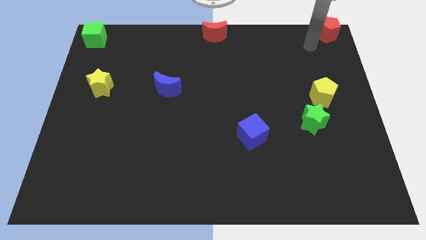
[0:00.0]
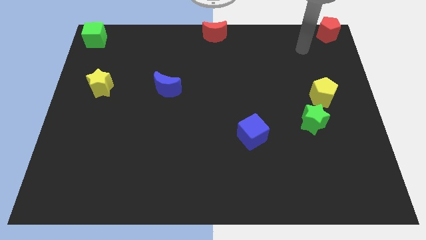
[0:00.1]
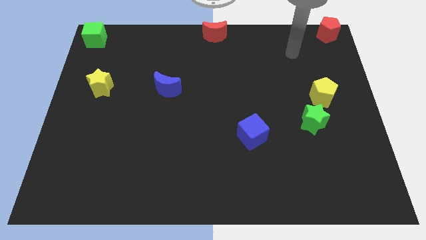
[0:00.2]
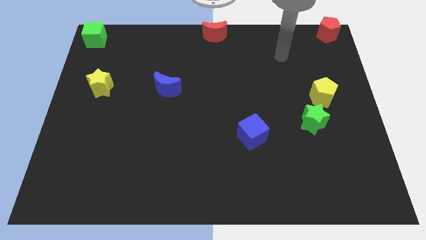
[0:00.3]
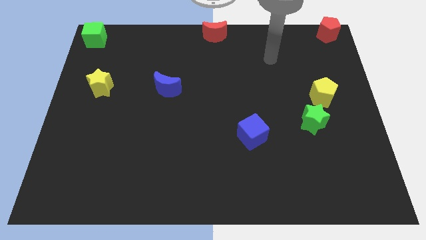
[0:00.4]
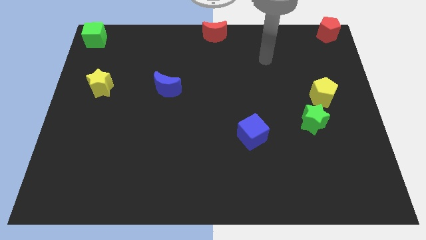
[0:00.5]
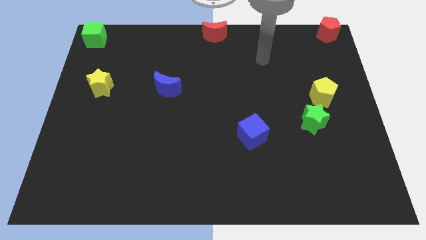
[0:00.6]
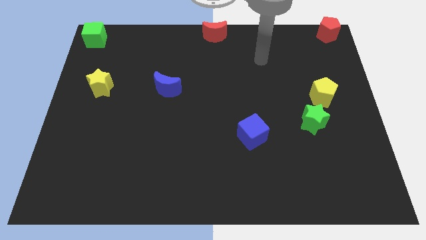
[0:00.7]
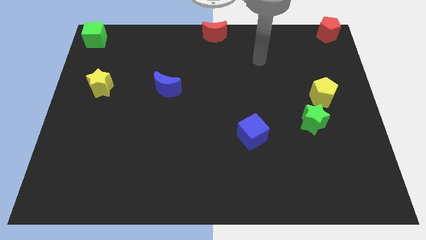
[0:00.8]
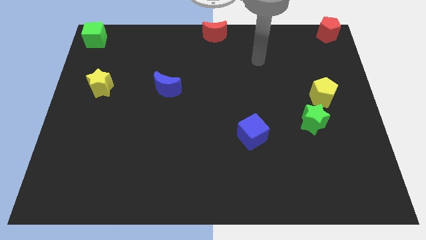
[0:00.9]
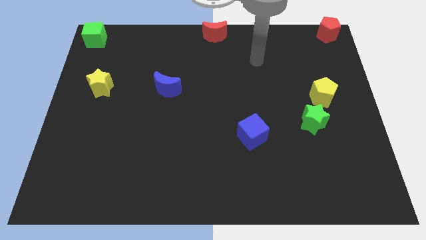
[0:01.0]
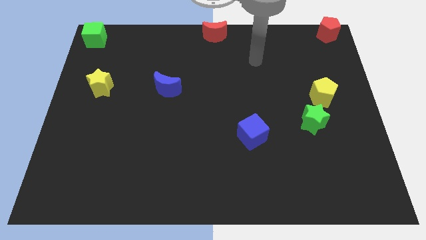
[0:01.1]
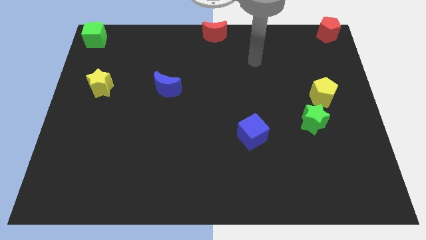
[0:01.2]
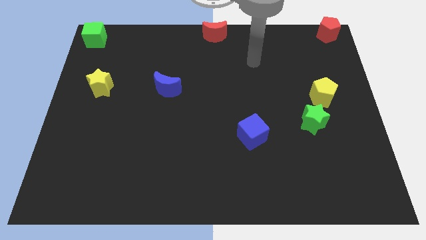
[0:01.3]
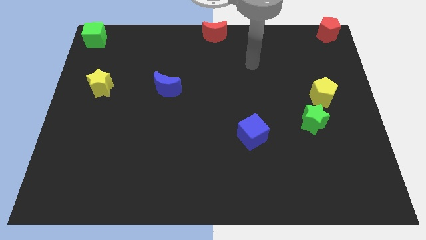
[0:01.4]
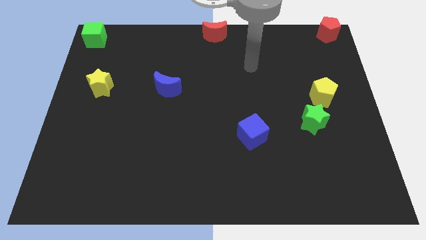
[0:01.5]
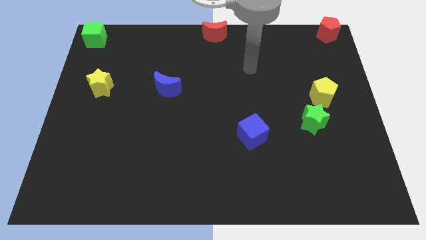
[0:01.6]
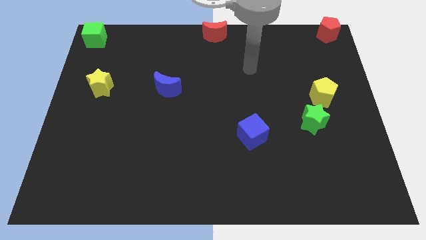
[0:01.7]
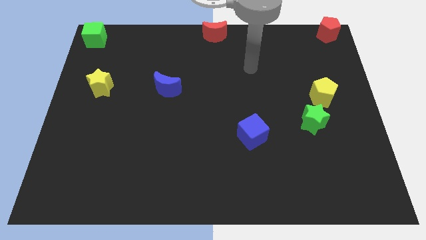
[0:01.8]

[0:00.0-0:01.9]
move your arm away from the red pentagon

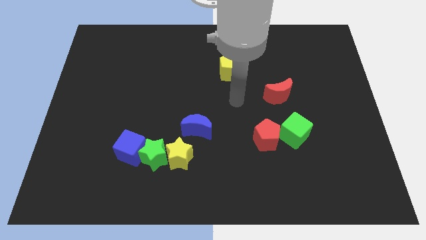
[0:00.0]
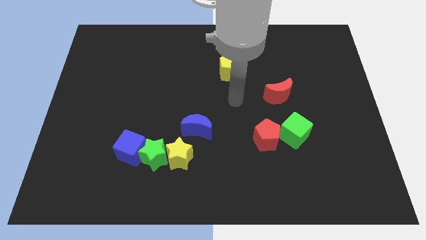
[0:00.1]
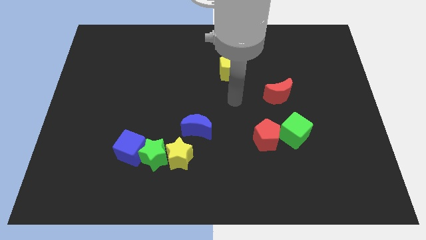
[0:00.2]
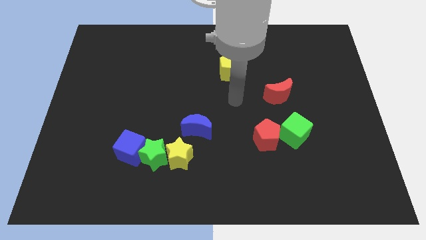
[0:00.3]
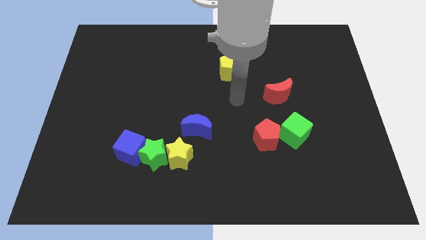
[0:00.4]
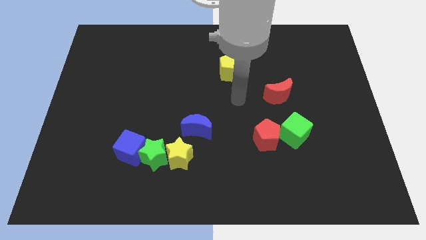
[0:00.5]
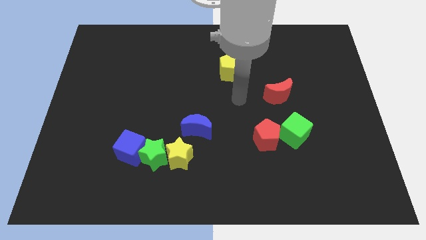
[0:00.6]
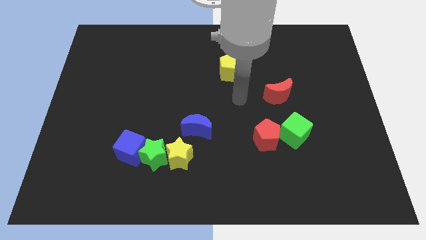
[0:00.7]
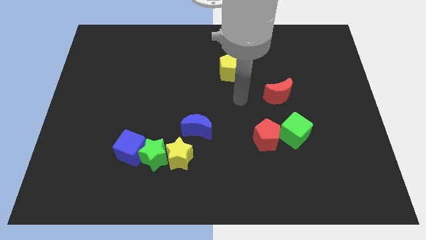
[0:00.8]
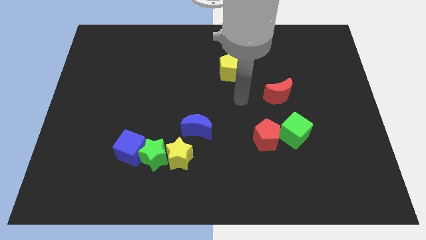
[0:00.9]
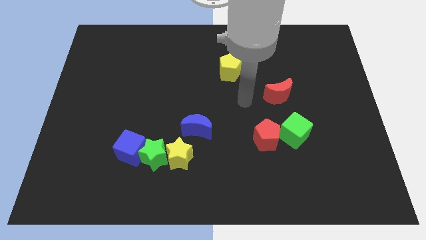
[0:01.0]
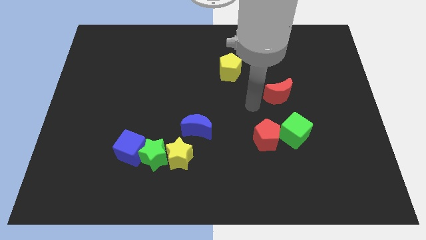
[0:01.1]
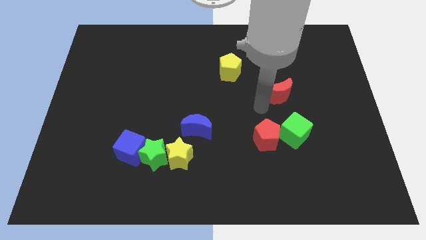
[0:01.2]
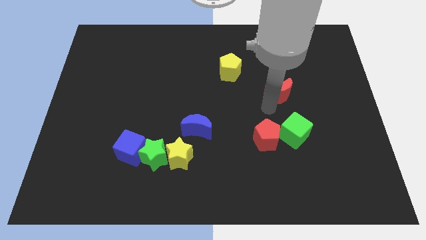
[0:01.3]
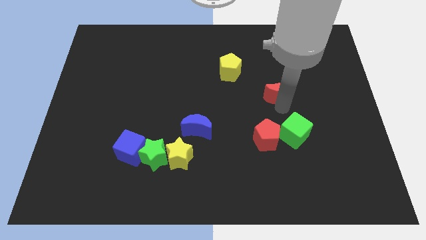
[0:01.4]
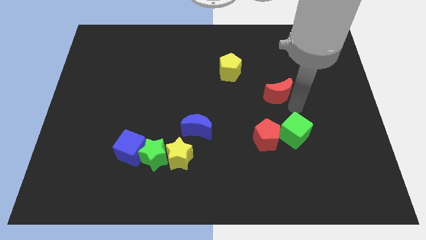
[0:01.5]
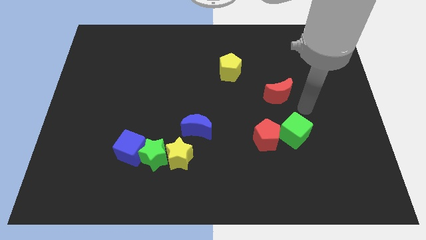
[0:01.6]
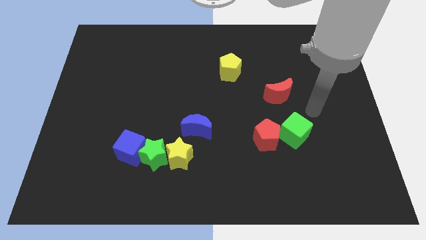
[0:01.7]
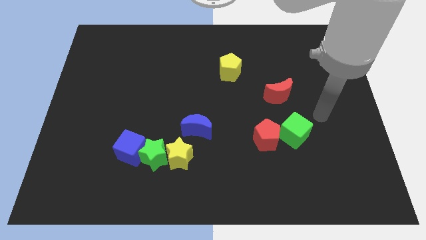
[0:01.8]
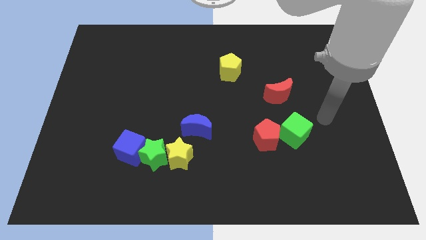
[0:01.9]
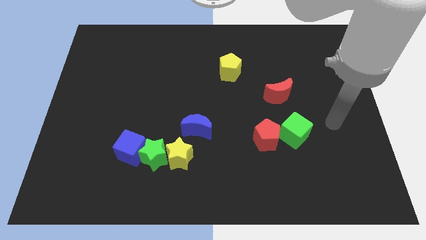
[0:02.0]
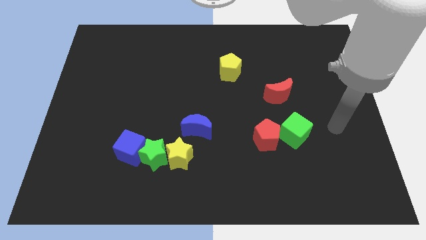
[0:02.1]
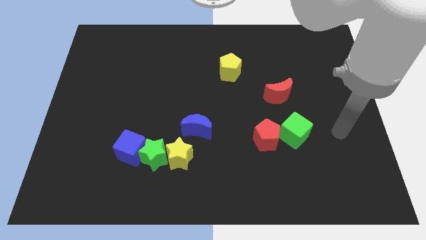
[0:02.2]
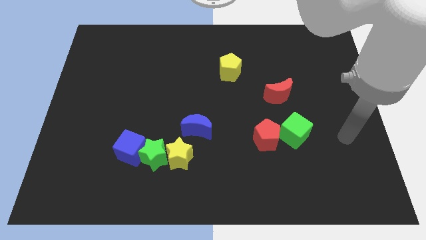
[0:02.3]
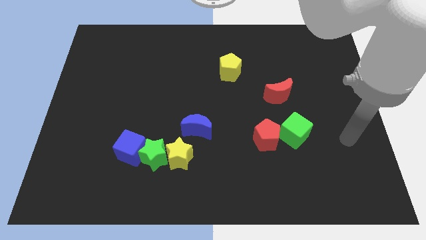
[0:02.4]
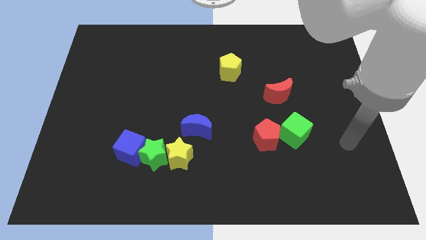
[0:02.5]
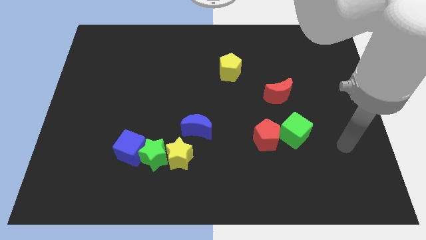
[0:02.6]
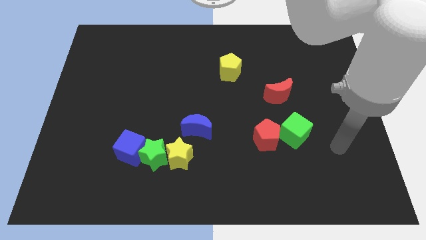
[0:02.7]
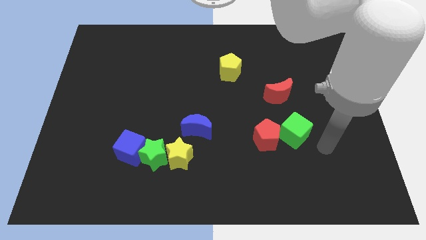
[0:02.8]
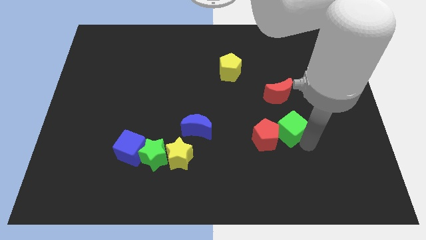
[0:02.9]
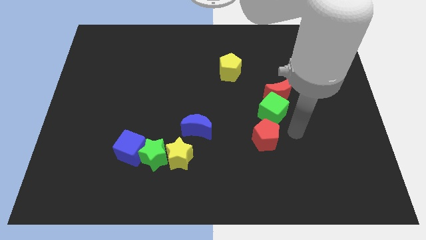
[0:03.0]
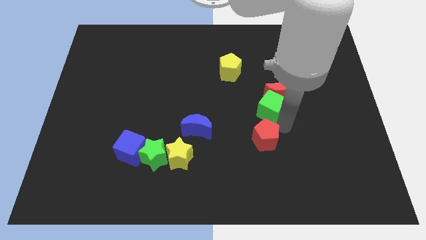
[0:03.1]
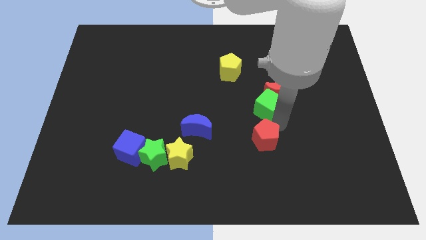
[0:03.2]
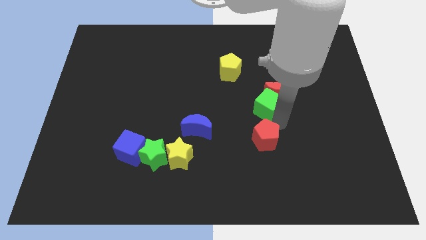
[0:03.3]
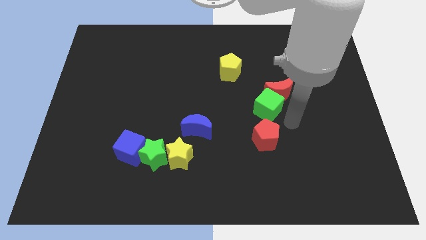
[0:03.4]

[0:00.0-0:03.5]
place the green cube below the red crescent

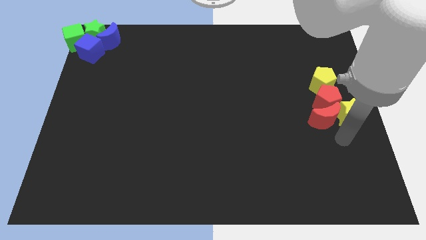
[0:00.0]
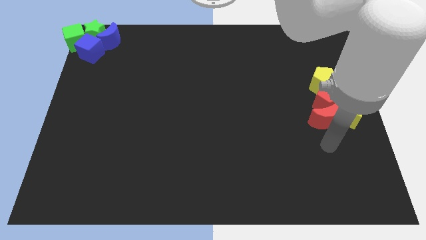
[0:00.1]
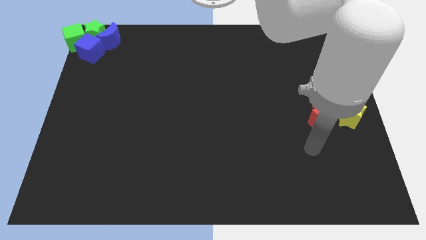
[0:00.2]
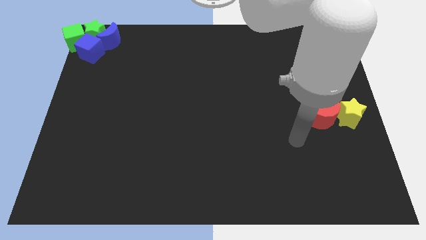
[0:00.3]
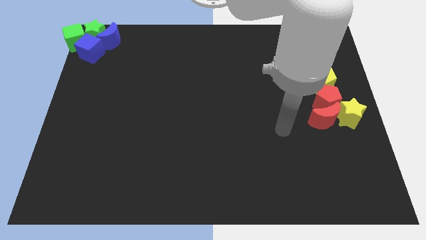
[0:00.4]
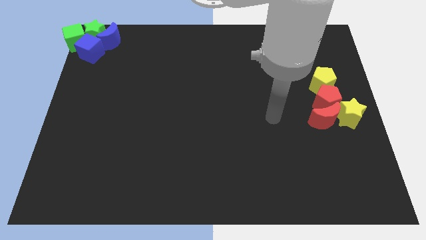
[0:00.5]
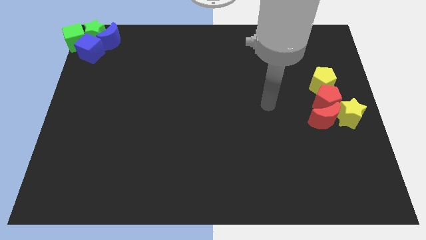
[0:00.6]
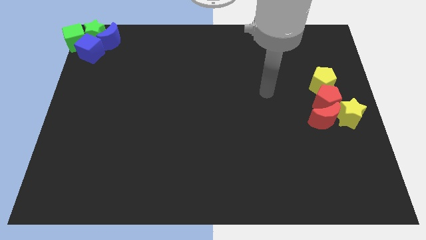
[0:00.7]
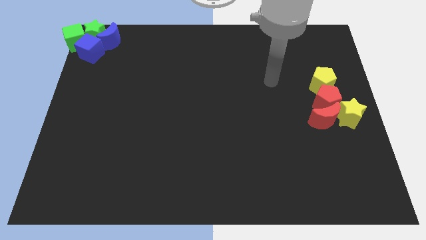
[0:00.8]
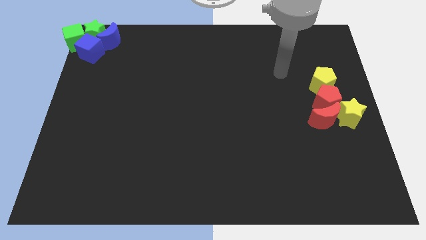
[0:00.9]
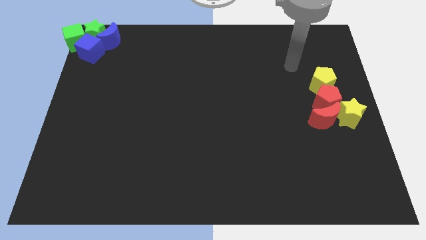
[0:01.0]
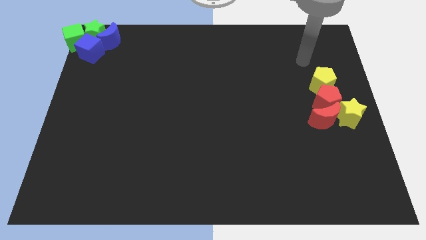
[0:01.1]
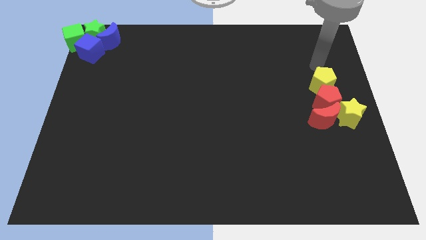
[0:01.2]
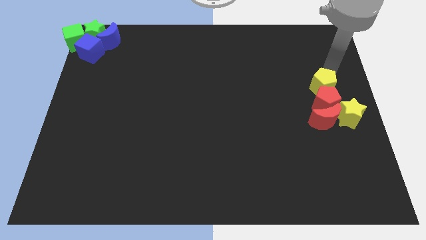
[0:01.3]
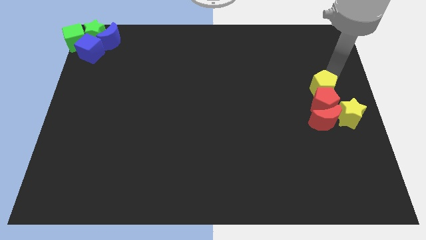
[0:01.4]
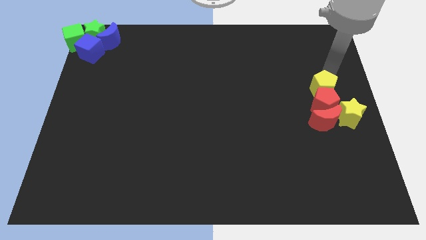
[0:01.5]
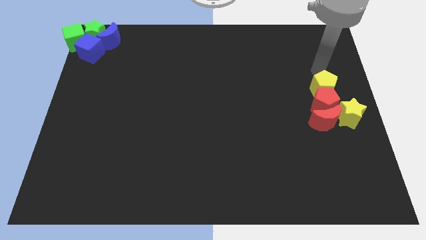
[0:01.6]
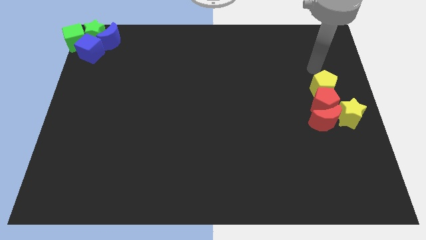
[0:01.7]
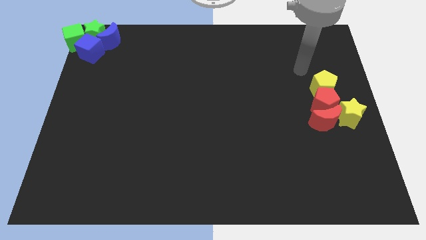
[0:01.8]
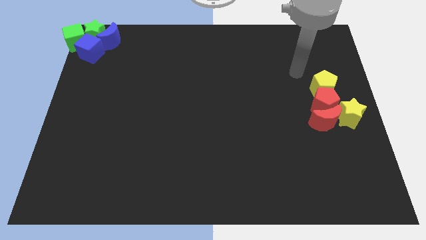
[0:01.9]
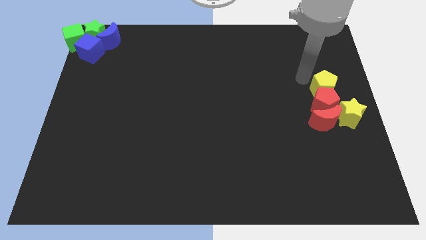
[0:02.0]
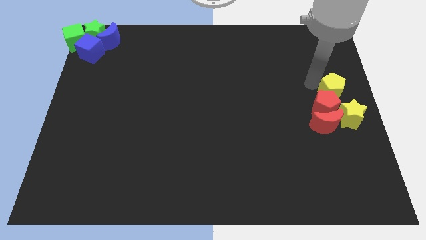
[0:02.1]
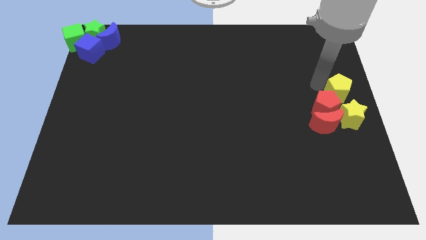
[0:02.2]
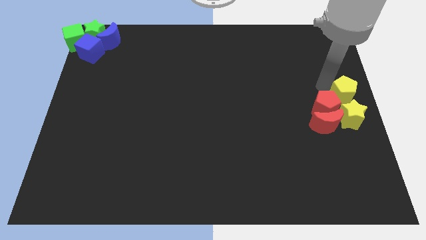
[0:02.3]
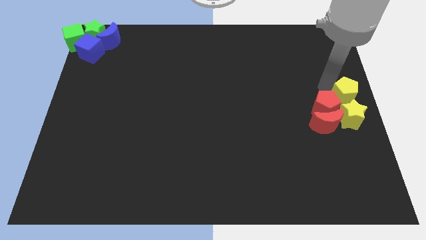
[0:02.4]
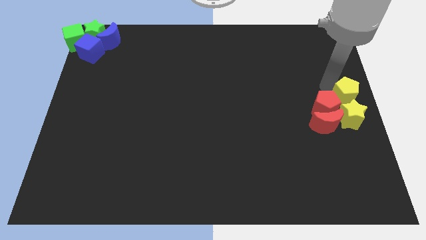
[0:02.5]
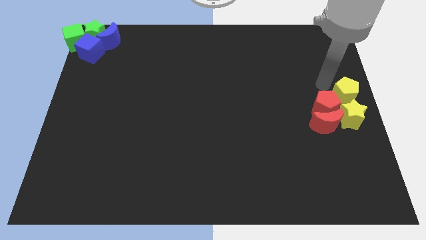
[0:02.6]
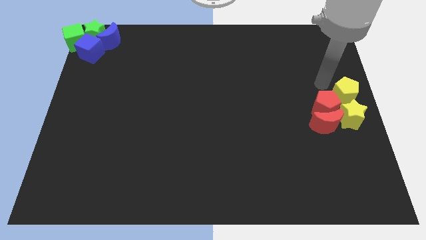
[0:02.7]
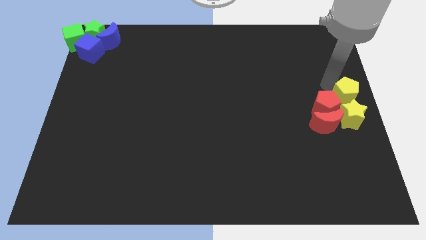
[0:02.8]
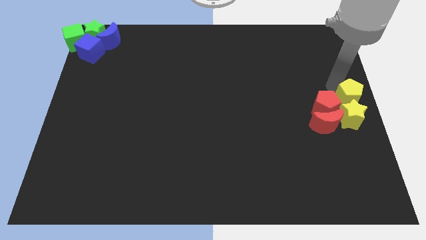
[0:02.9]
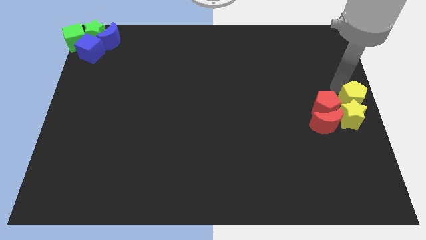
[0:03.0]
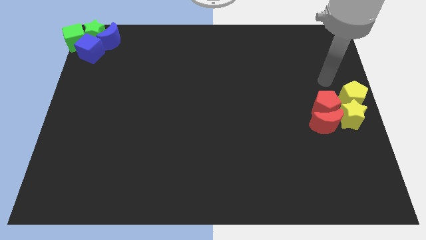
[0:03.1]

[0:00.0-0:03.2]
place all the red and yellow blocks at the center right of the board

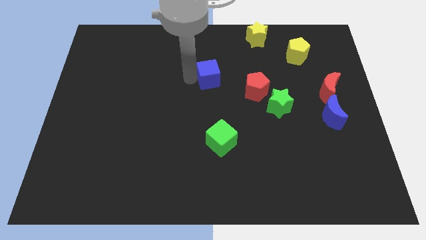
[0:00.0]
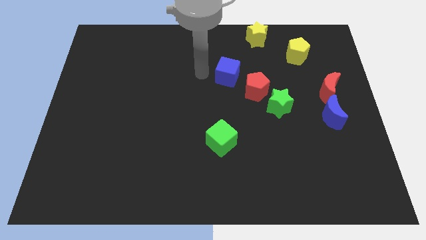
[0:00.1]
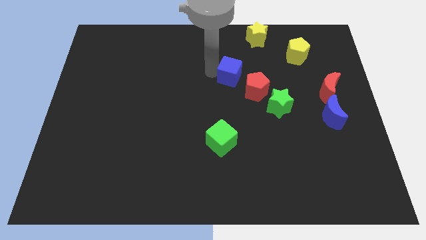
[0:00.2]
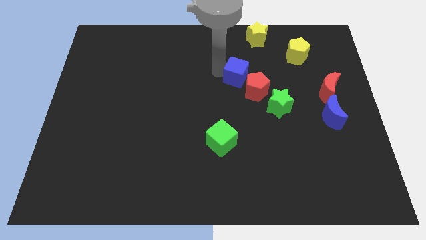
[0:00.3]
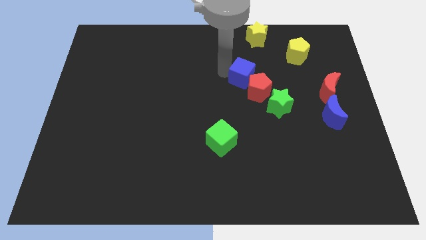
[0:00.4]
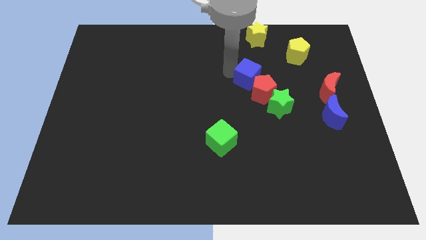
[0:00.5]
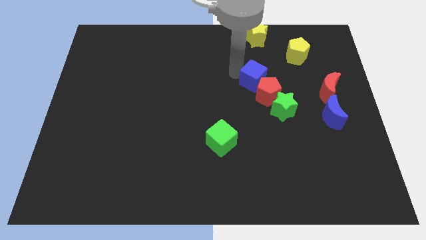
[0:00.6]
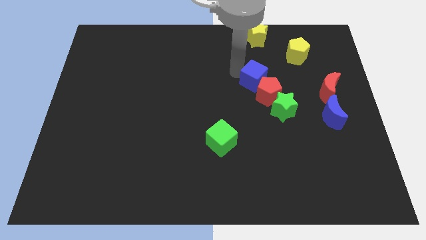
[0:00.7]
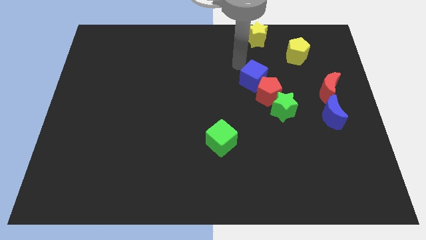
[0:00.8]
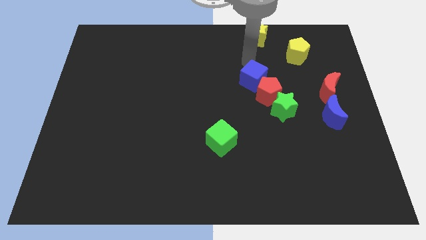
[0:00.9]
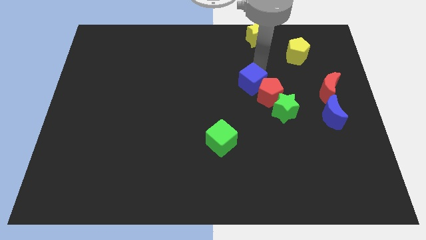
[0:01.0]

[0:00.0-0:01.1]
push the blue cube into the red pentagon
